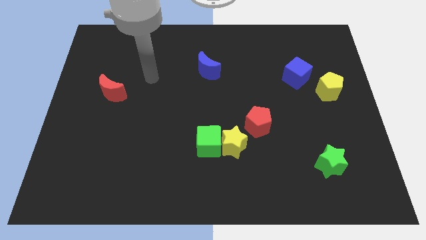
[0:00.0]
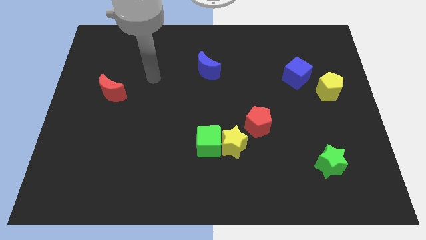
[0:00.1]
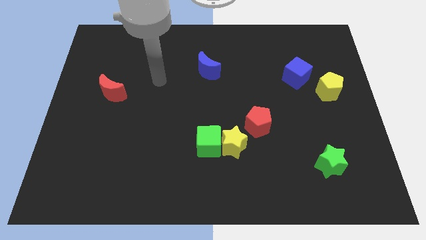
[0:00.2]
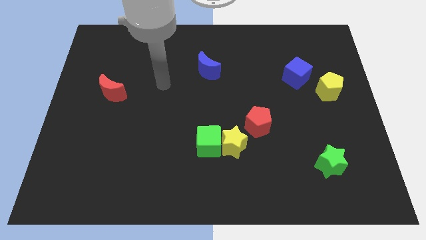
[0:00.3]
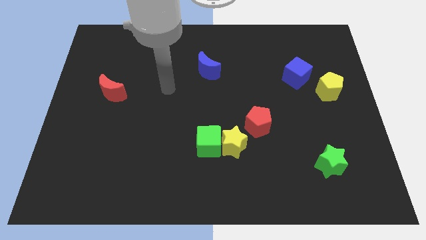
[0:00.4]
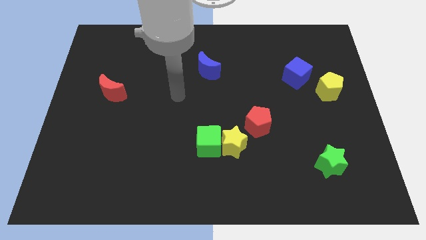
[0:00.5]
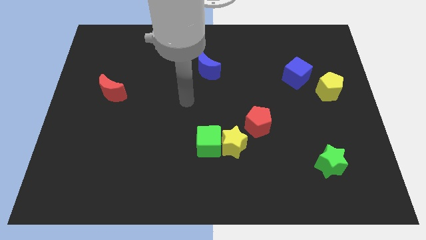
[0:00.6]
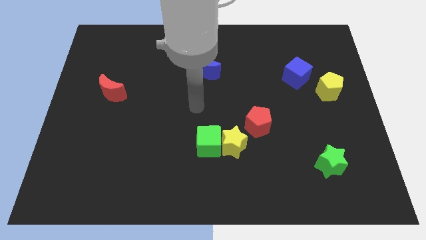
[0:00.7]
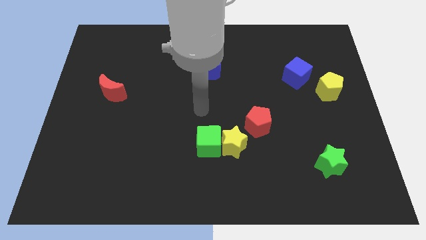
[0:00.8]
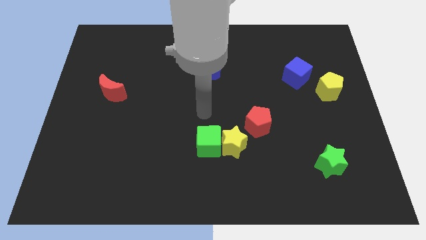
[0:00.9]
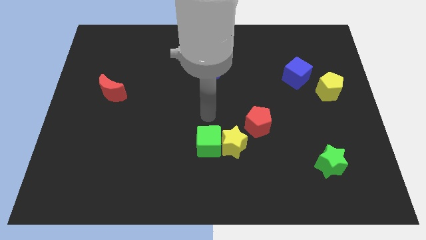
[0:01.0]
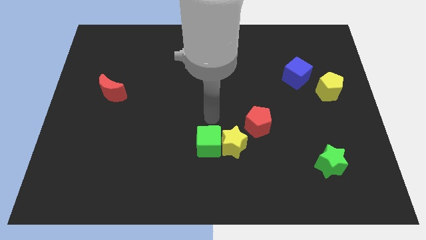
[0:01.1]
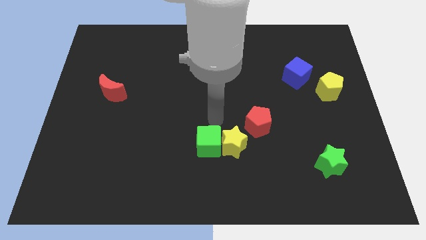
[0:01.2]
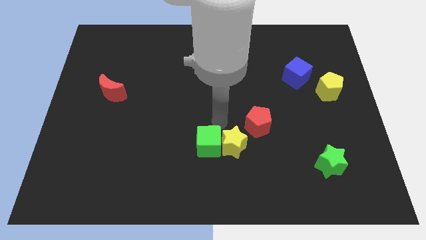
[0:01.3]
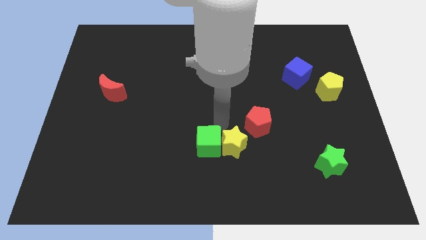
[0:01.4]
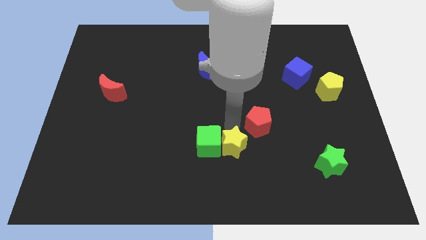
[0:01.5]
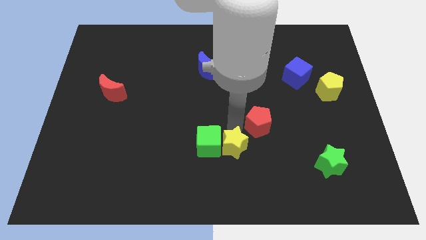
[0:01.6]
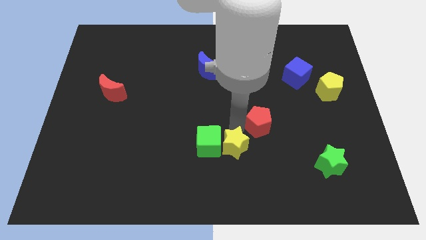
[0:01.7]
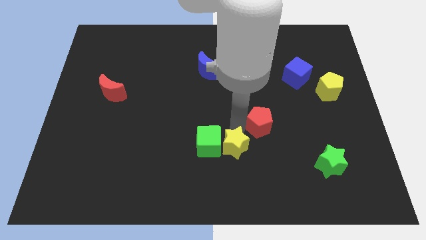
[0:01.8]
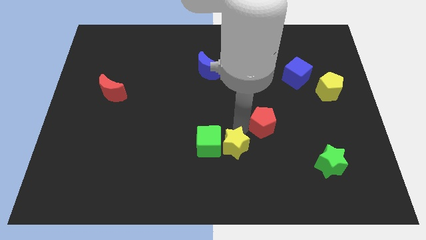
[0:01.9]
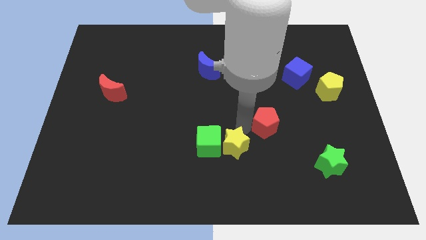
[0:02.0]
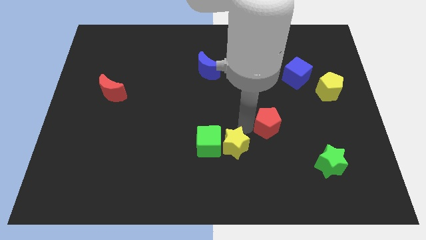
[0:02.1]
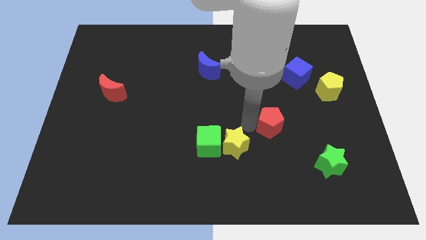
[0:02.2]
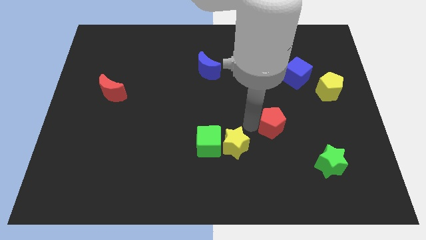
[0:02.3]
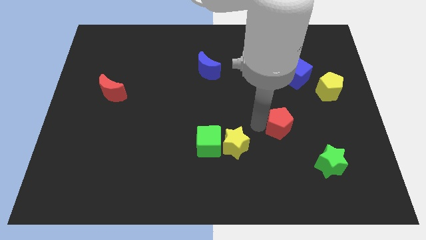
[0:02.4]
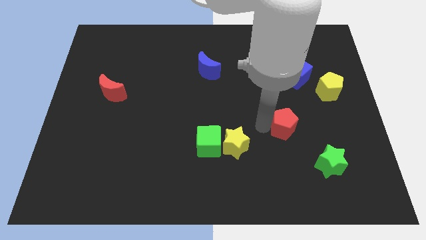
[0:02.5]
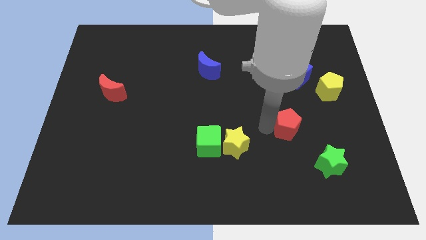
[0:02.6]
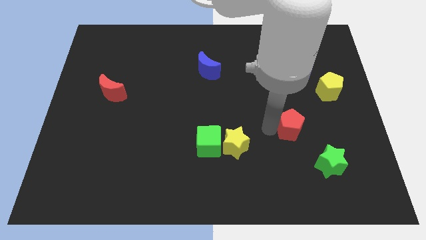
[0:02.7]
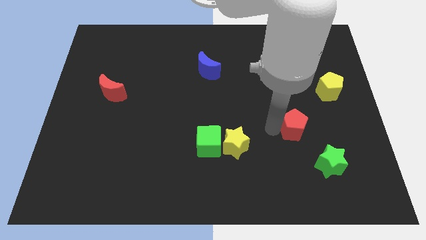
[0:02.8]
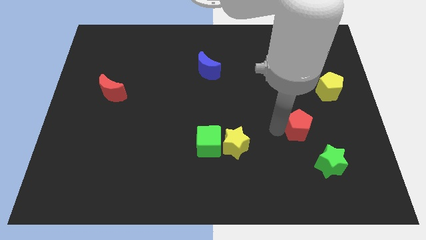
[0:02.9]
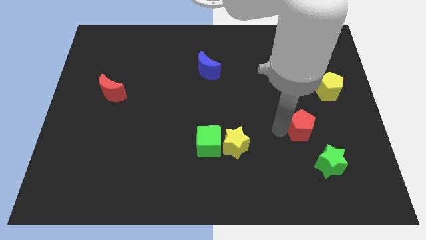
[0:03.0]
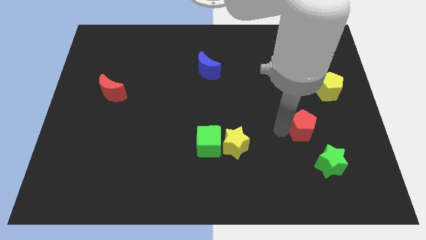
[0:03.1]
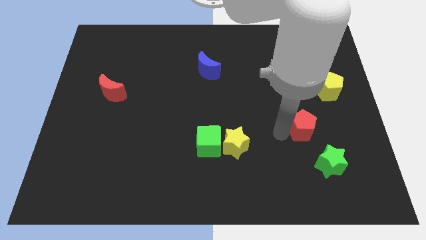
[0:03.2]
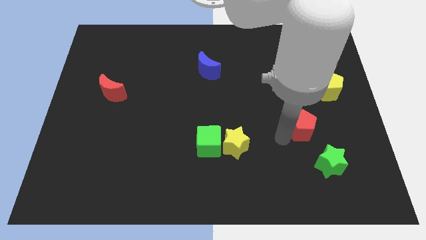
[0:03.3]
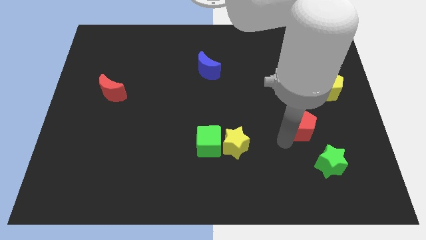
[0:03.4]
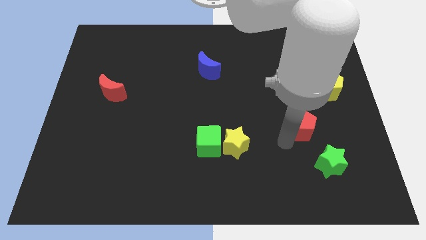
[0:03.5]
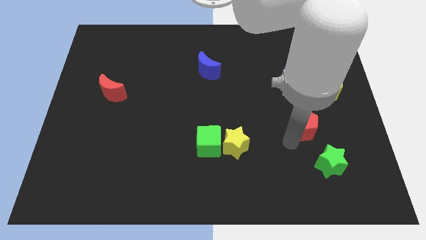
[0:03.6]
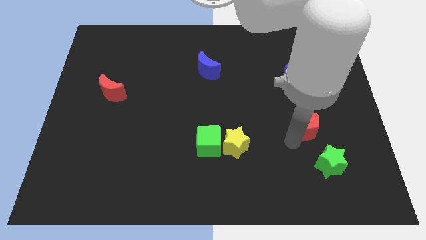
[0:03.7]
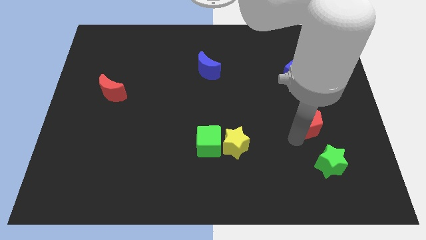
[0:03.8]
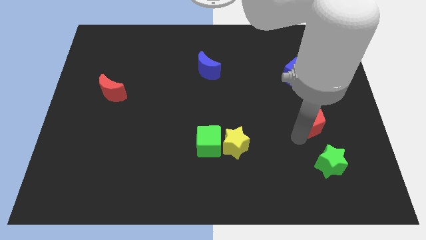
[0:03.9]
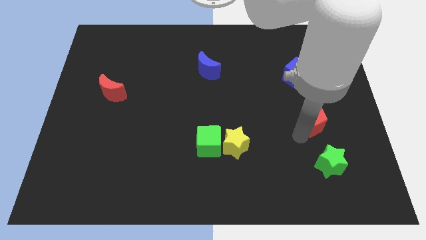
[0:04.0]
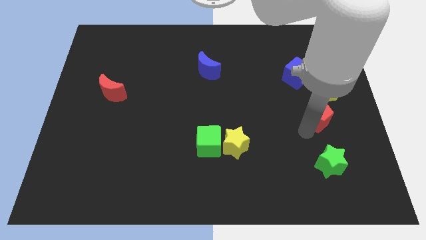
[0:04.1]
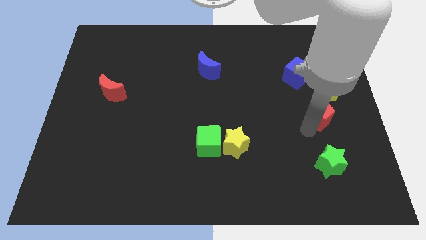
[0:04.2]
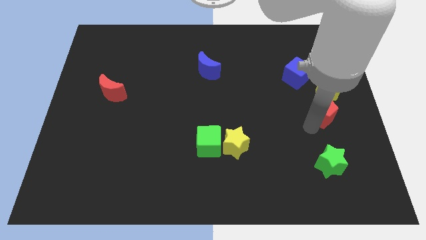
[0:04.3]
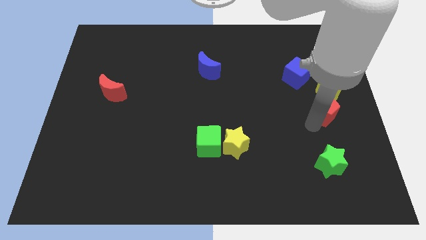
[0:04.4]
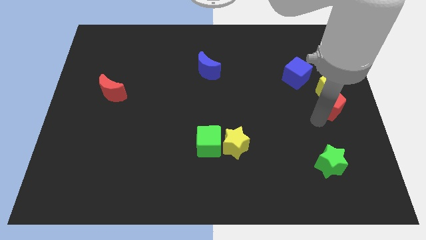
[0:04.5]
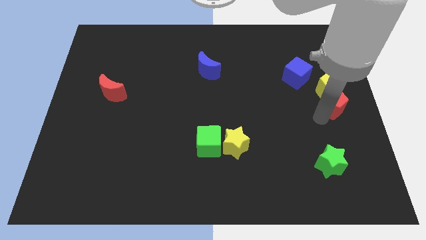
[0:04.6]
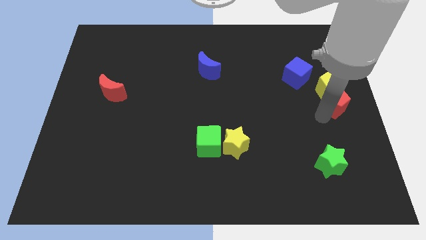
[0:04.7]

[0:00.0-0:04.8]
push the red pentagon close to the yellow pentagon

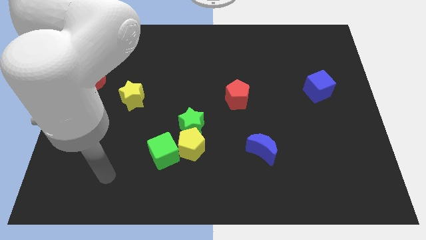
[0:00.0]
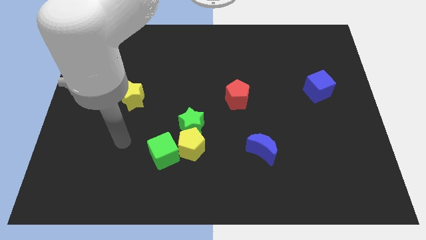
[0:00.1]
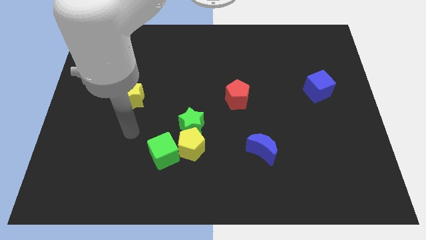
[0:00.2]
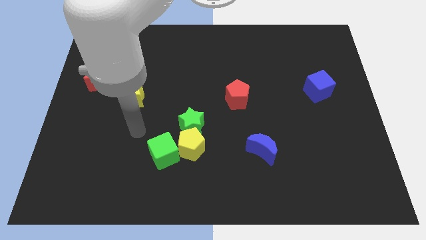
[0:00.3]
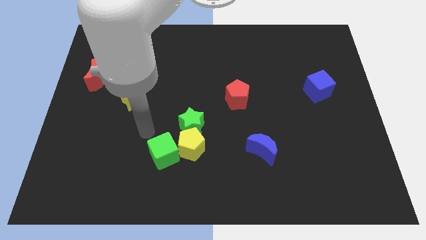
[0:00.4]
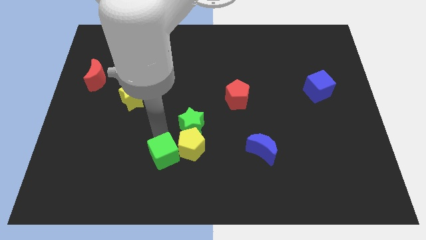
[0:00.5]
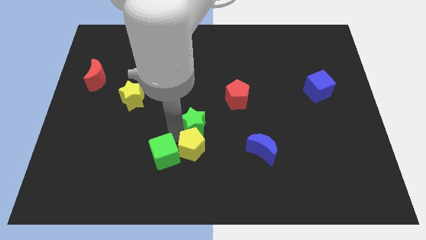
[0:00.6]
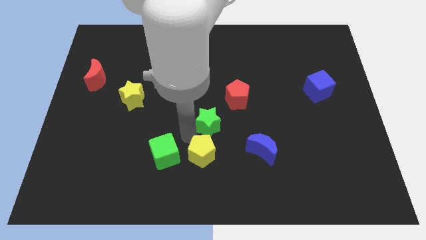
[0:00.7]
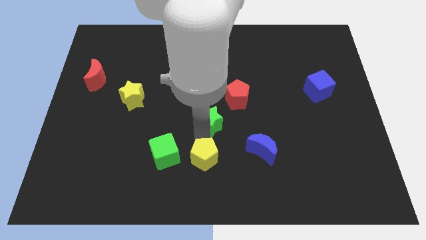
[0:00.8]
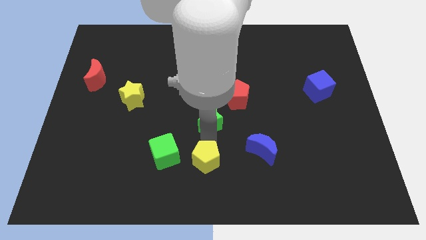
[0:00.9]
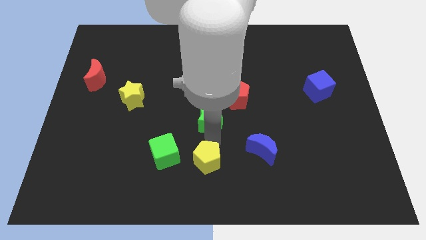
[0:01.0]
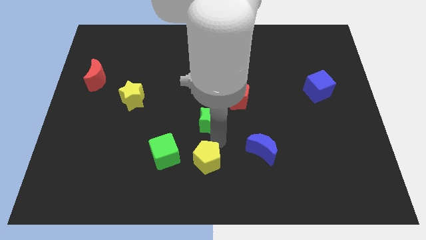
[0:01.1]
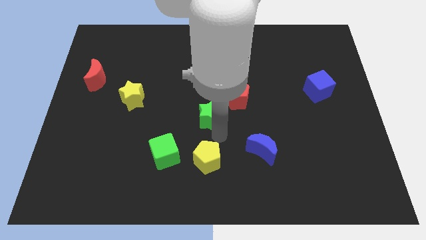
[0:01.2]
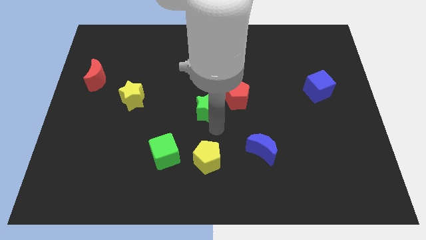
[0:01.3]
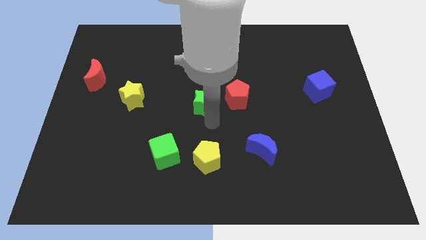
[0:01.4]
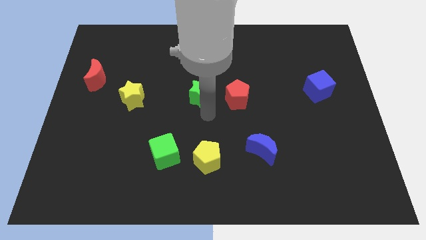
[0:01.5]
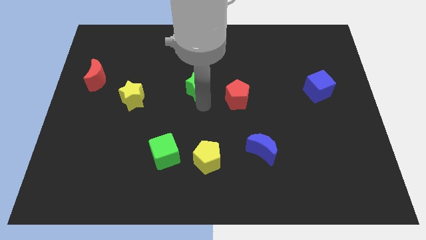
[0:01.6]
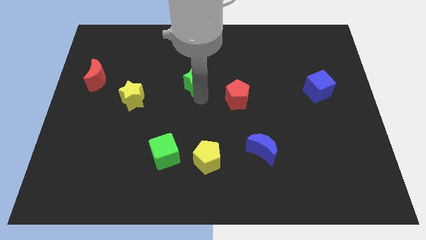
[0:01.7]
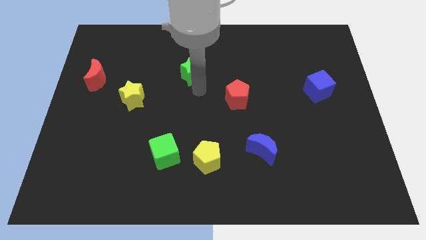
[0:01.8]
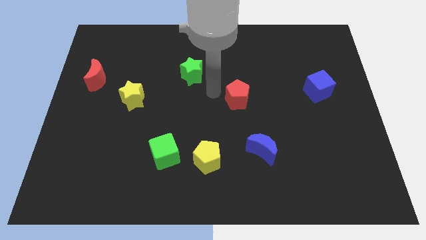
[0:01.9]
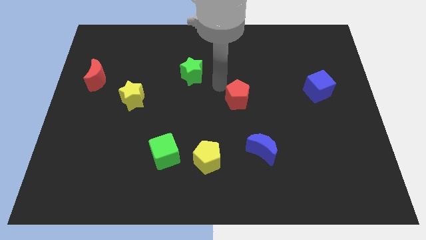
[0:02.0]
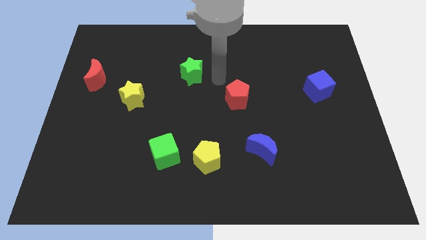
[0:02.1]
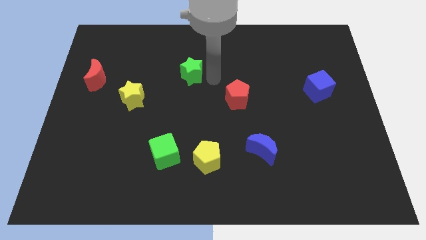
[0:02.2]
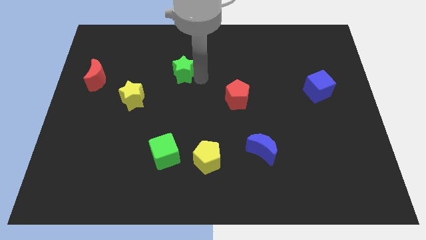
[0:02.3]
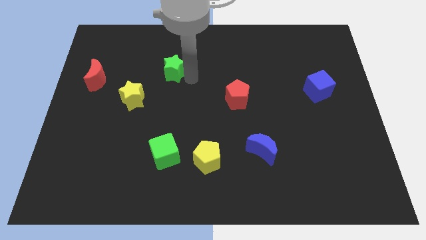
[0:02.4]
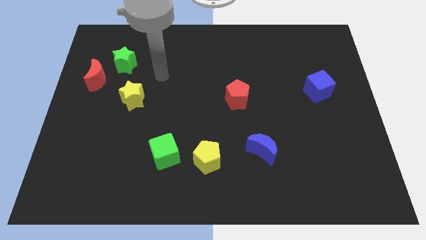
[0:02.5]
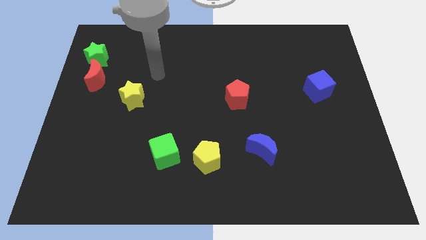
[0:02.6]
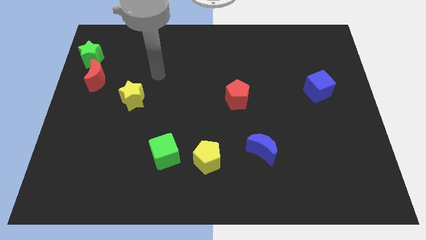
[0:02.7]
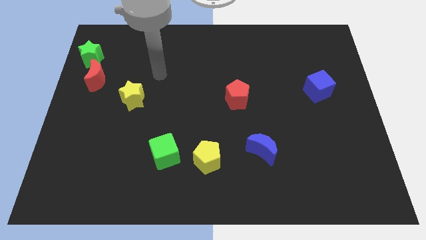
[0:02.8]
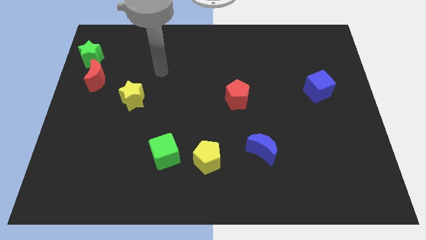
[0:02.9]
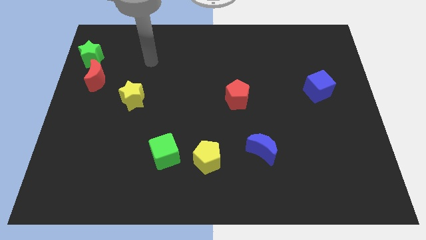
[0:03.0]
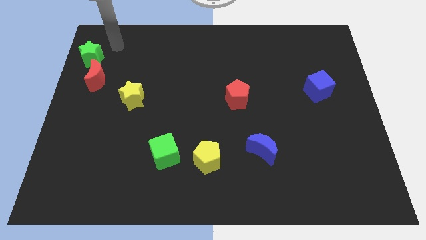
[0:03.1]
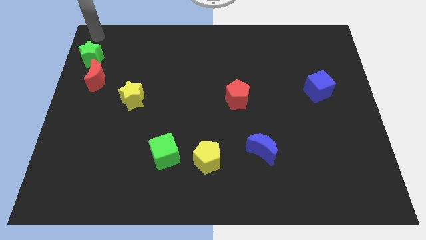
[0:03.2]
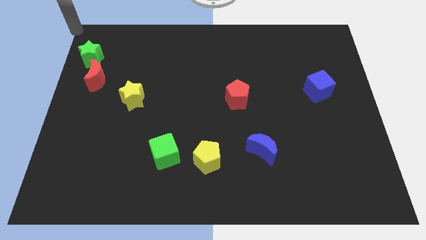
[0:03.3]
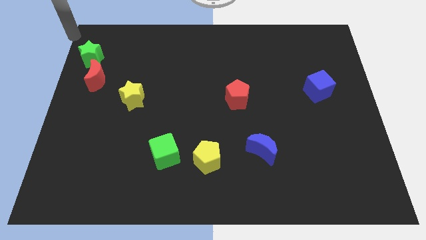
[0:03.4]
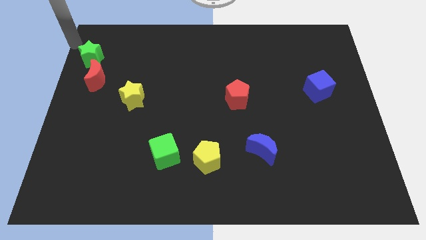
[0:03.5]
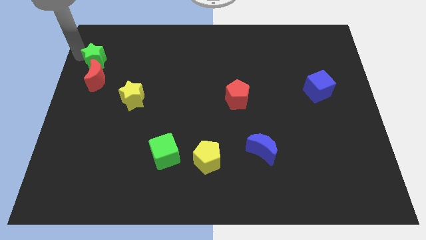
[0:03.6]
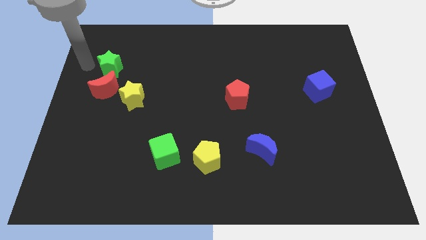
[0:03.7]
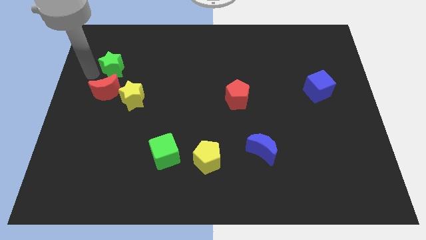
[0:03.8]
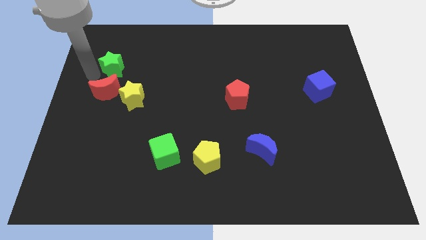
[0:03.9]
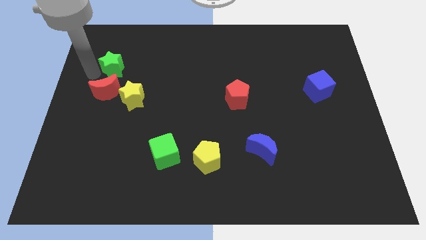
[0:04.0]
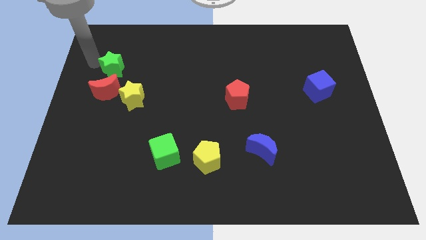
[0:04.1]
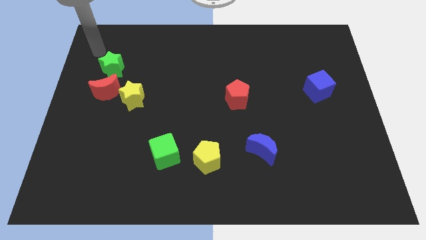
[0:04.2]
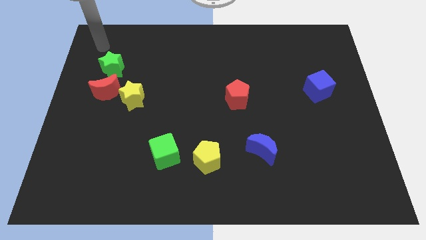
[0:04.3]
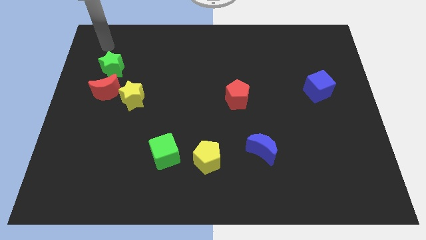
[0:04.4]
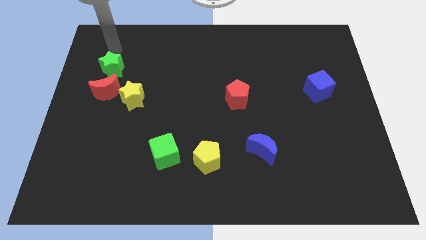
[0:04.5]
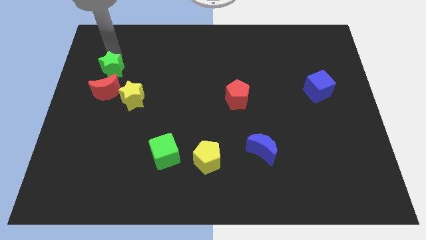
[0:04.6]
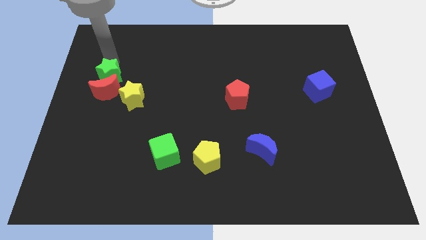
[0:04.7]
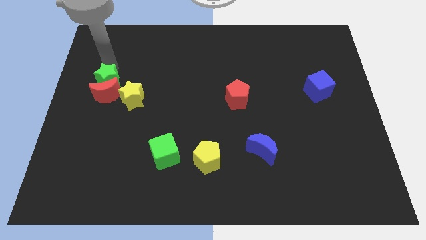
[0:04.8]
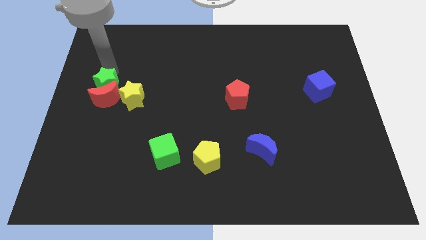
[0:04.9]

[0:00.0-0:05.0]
push the green star towards the red moon
